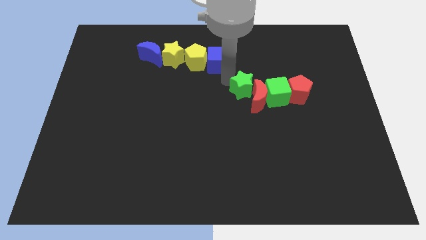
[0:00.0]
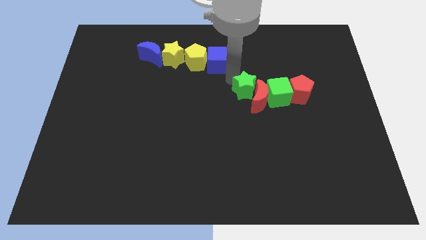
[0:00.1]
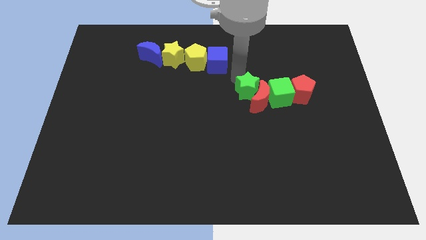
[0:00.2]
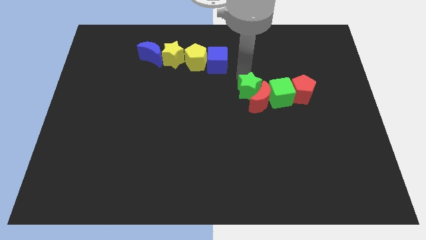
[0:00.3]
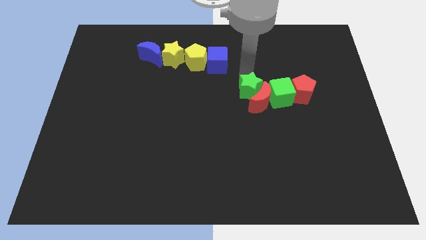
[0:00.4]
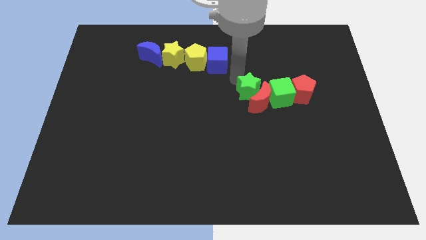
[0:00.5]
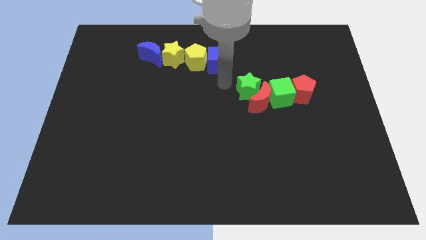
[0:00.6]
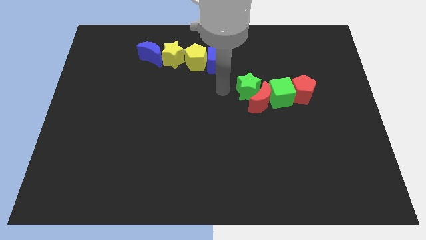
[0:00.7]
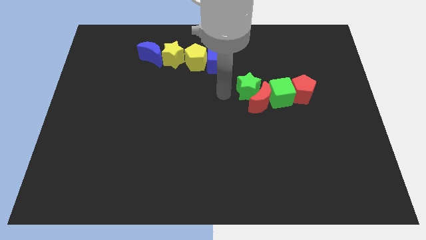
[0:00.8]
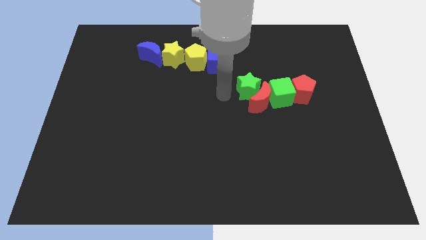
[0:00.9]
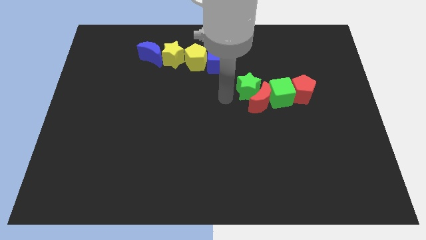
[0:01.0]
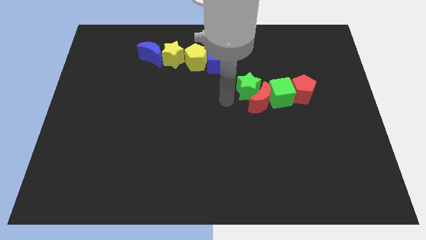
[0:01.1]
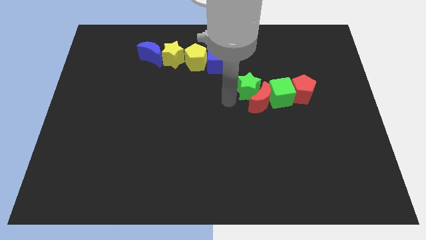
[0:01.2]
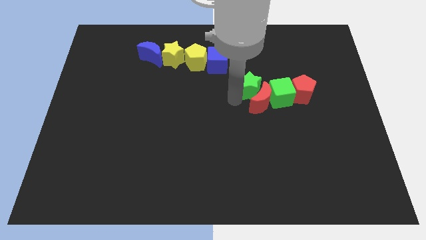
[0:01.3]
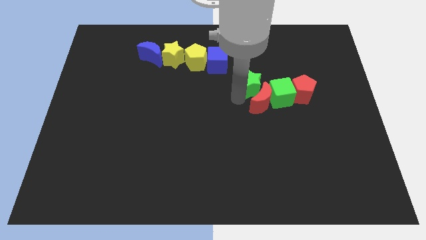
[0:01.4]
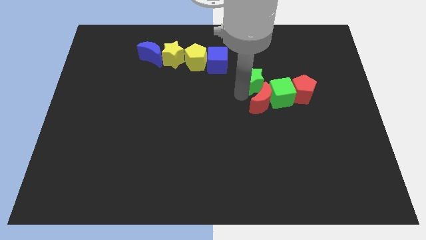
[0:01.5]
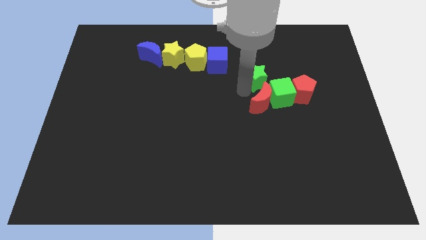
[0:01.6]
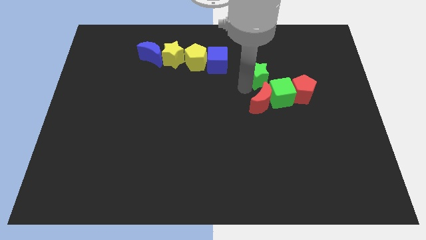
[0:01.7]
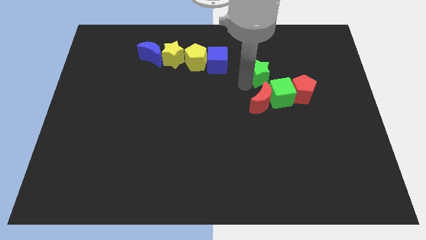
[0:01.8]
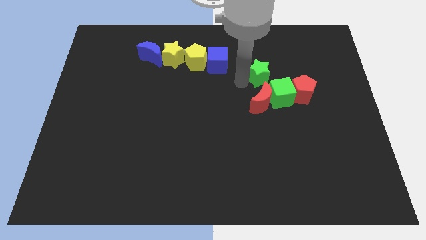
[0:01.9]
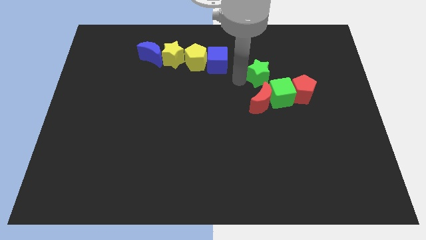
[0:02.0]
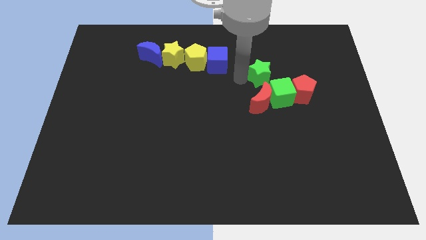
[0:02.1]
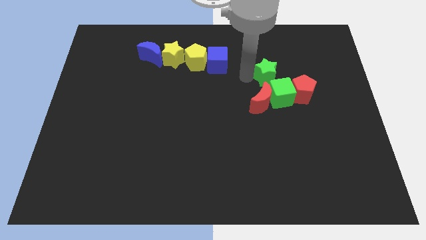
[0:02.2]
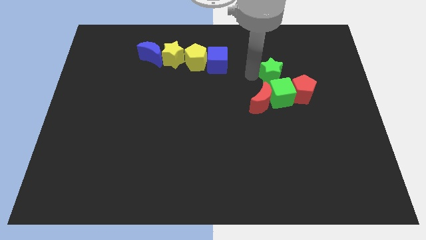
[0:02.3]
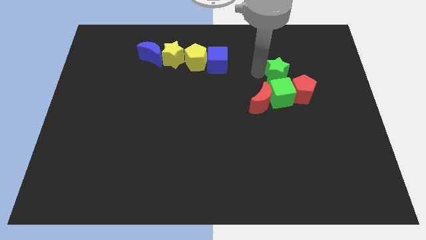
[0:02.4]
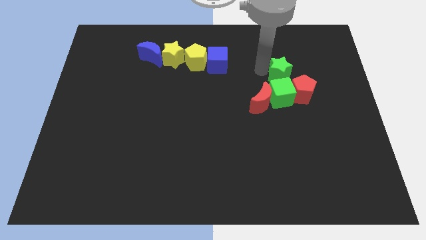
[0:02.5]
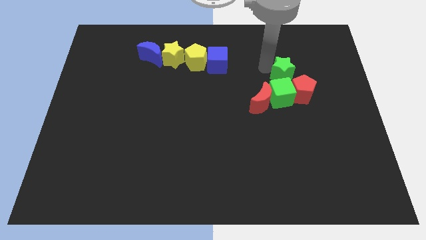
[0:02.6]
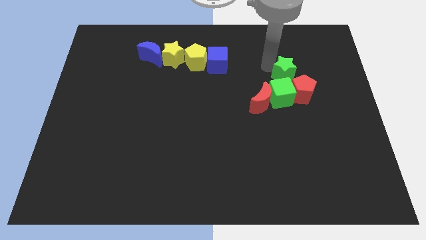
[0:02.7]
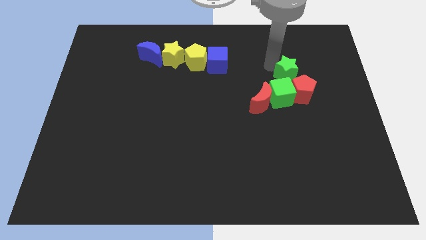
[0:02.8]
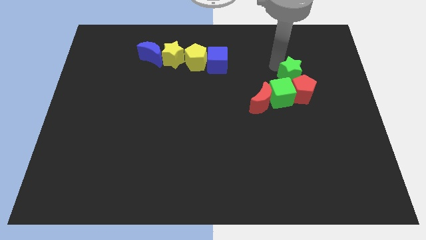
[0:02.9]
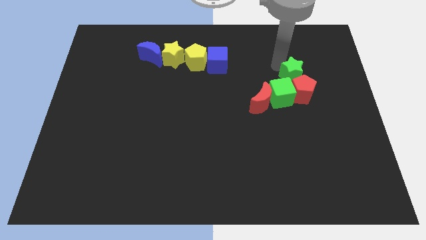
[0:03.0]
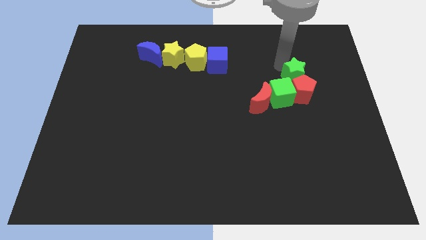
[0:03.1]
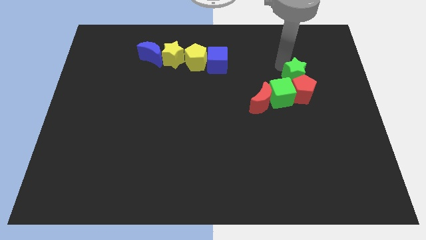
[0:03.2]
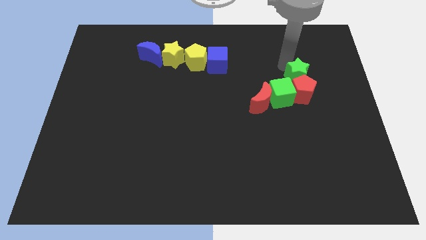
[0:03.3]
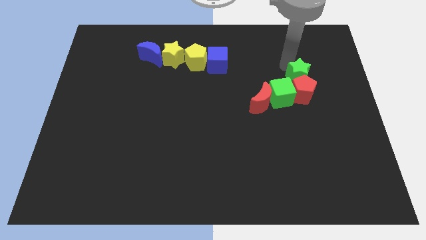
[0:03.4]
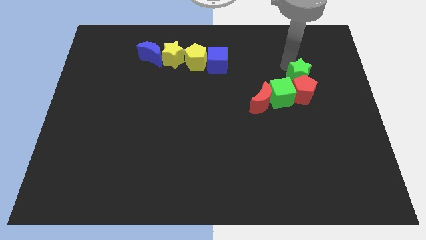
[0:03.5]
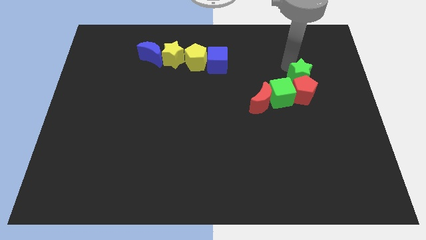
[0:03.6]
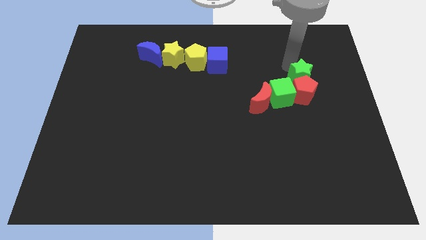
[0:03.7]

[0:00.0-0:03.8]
move the green star to the top side of the red pentagon

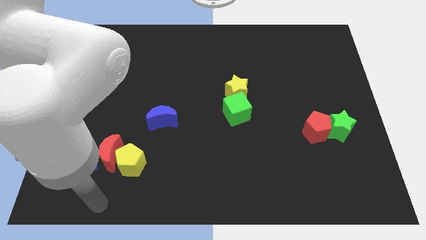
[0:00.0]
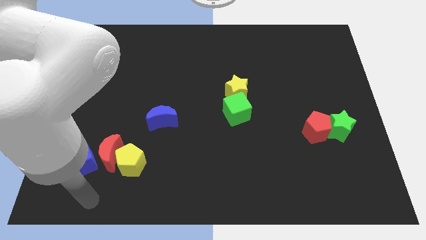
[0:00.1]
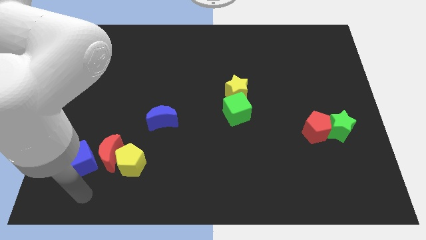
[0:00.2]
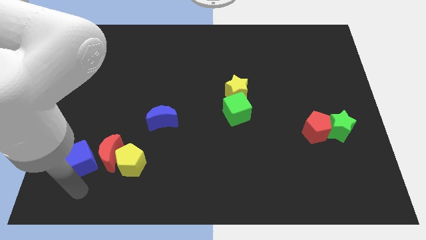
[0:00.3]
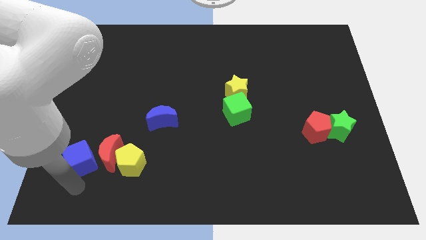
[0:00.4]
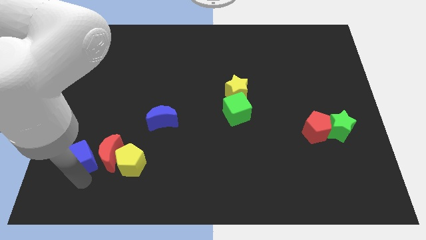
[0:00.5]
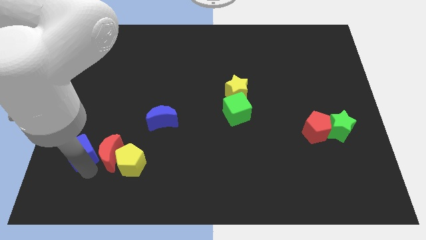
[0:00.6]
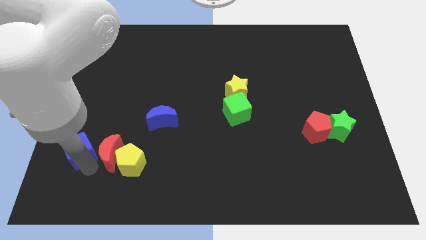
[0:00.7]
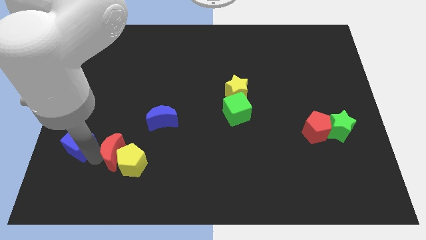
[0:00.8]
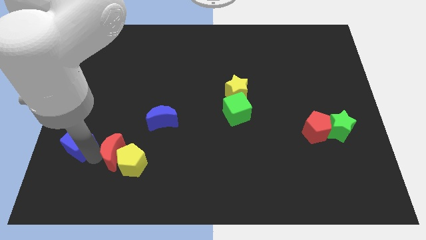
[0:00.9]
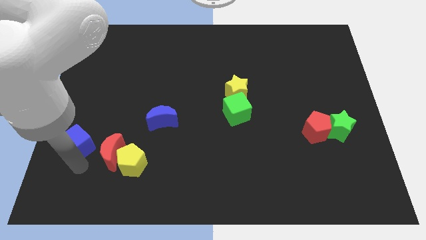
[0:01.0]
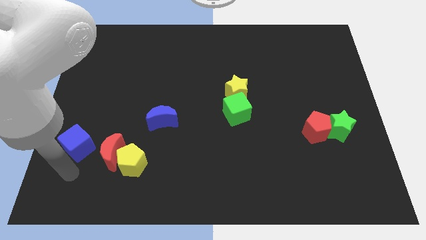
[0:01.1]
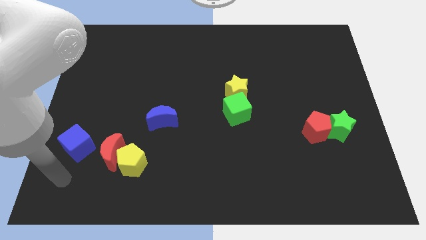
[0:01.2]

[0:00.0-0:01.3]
move the blue cube slightly to the top

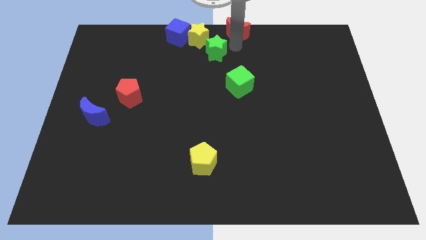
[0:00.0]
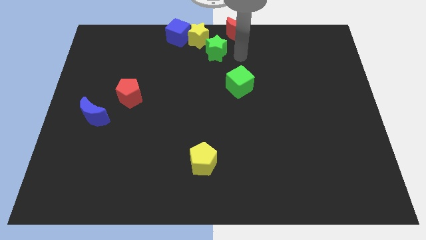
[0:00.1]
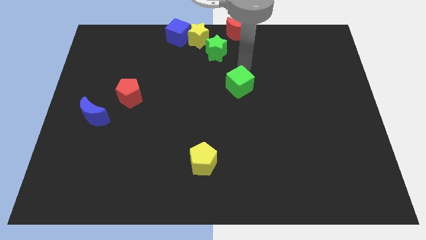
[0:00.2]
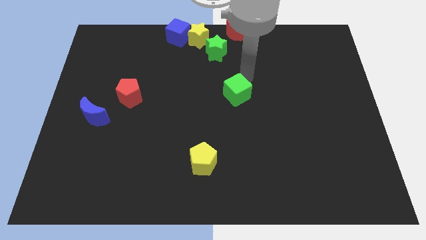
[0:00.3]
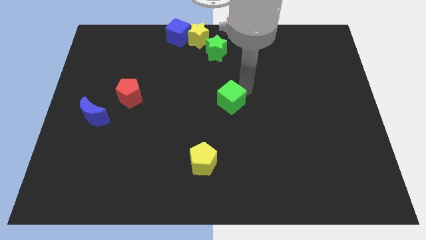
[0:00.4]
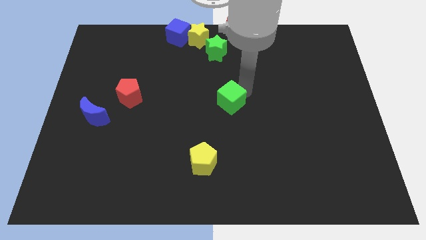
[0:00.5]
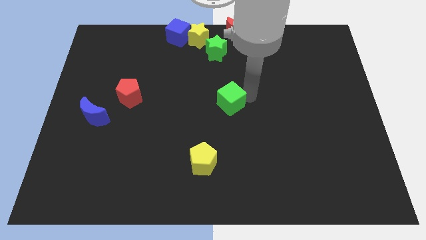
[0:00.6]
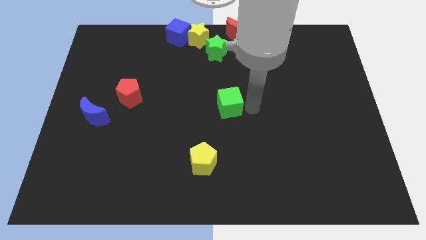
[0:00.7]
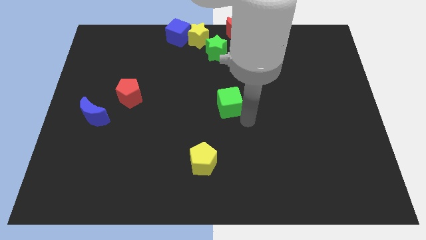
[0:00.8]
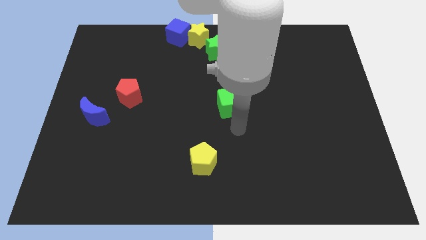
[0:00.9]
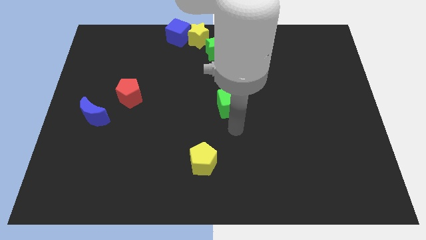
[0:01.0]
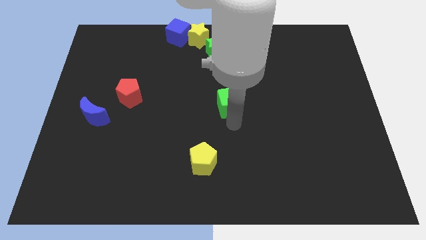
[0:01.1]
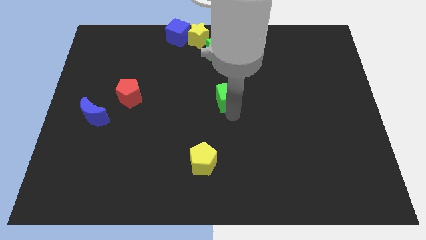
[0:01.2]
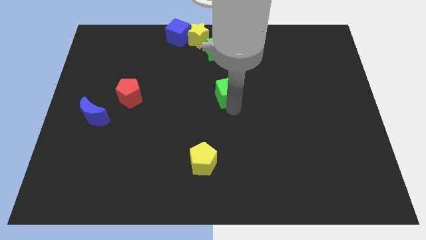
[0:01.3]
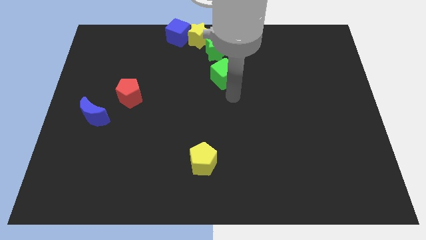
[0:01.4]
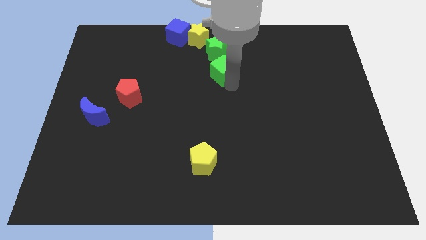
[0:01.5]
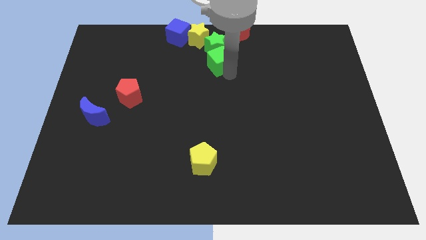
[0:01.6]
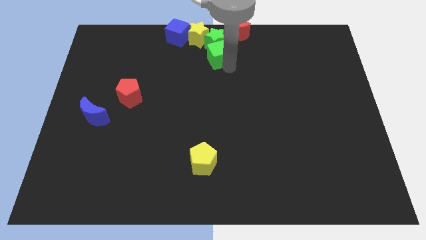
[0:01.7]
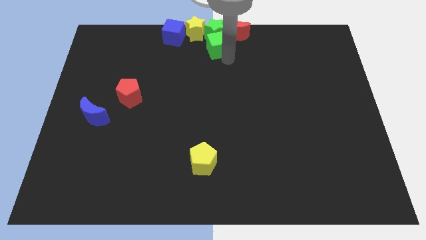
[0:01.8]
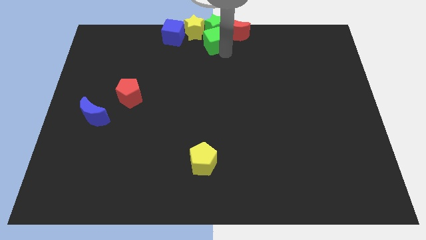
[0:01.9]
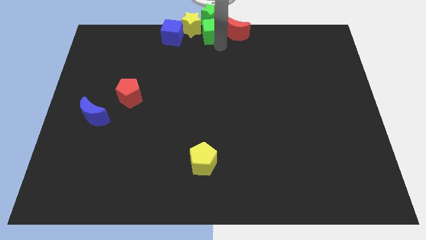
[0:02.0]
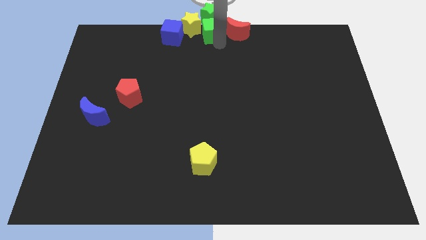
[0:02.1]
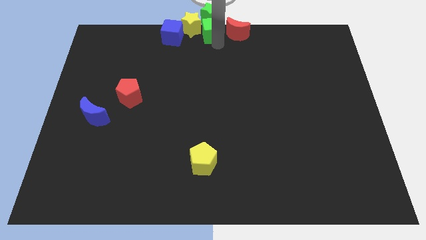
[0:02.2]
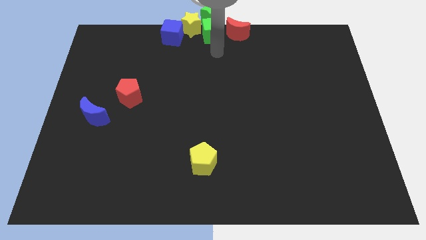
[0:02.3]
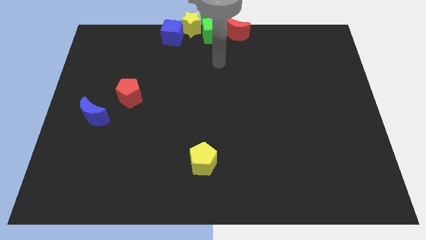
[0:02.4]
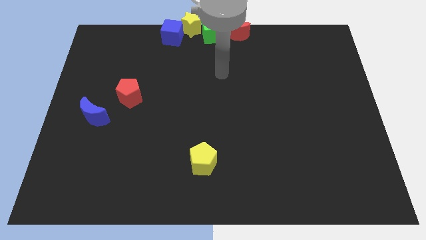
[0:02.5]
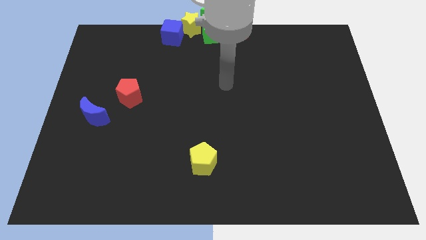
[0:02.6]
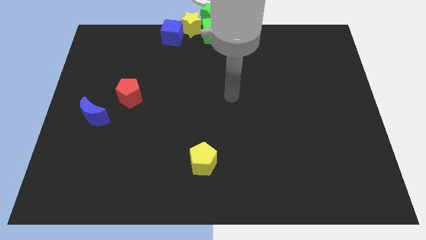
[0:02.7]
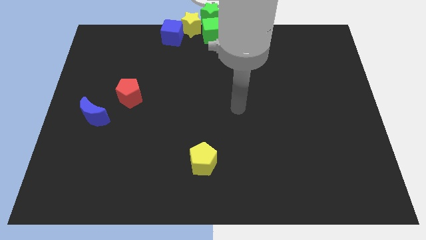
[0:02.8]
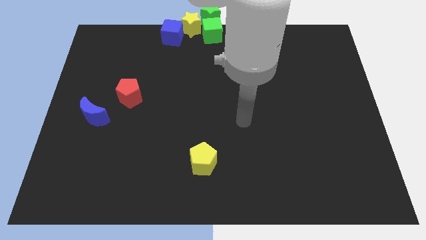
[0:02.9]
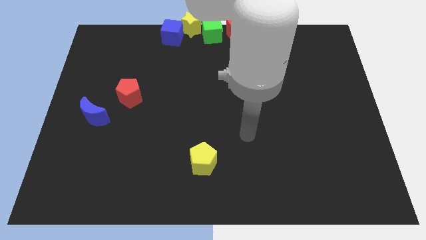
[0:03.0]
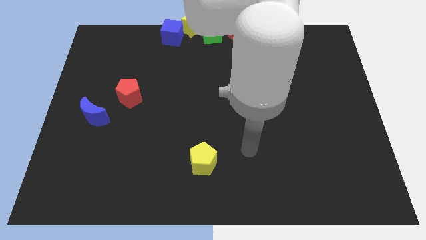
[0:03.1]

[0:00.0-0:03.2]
slide the green cube to the top center of the board

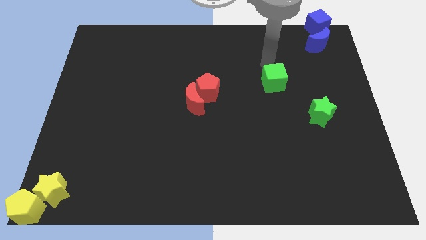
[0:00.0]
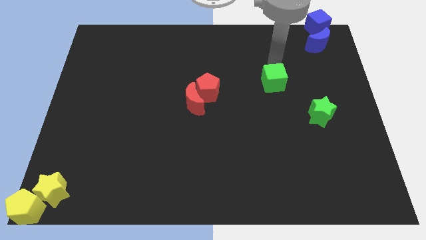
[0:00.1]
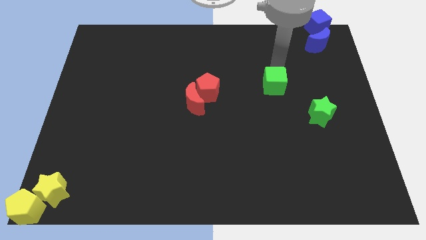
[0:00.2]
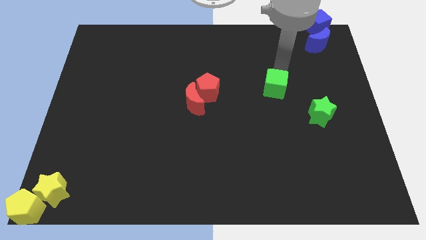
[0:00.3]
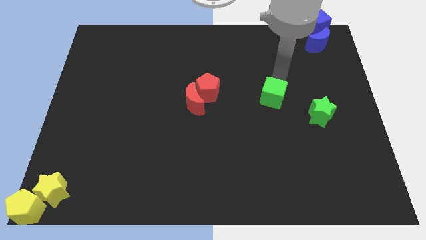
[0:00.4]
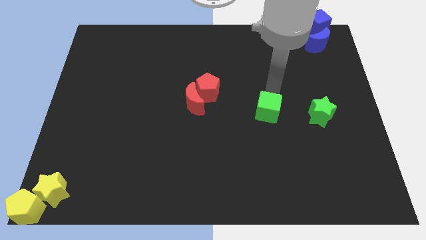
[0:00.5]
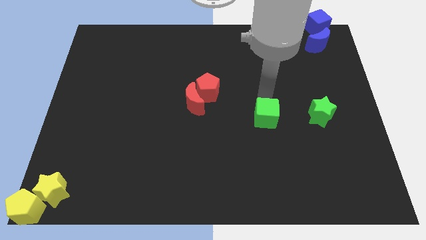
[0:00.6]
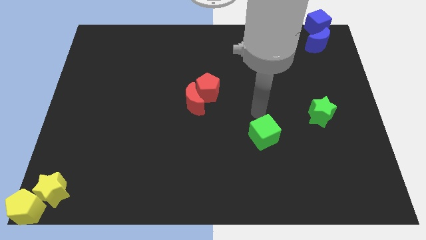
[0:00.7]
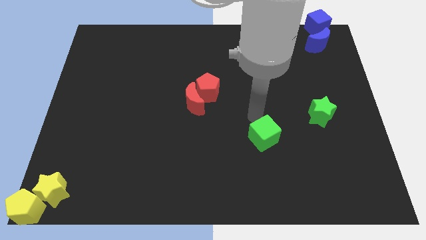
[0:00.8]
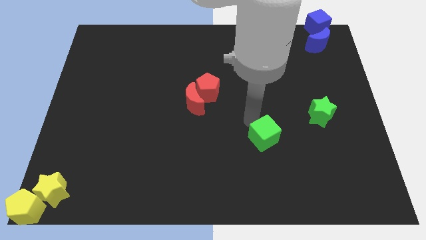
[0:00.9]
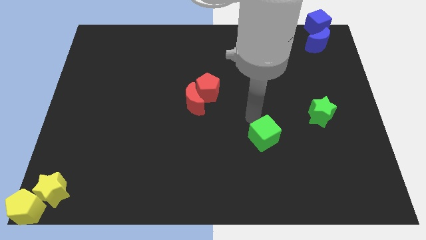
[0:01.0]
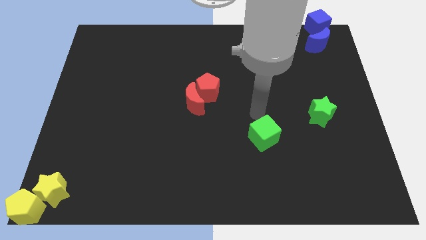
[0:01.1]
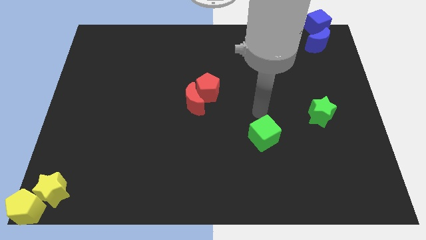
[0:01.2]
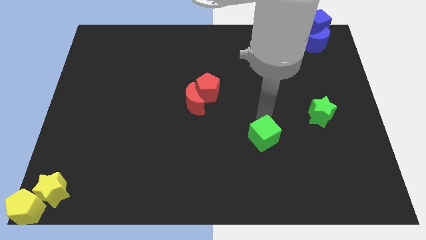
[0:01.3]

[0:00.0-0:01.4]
move the green cube to the bottom of the board
